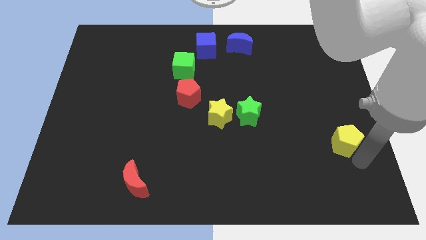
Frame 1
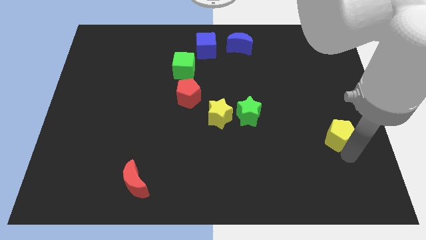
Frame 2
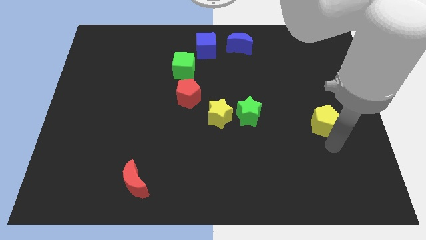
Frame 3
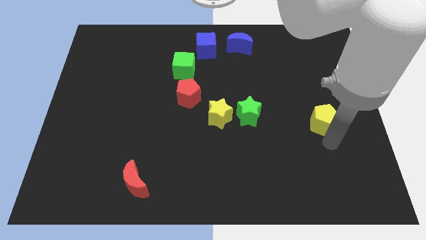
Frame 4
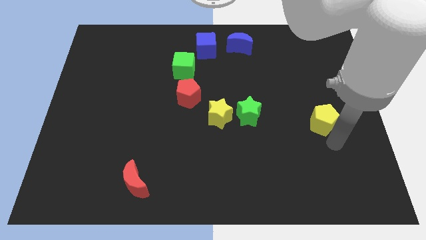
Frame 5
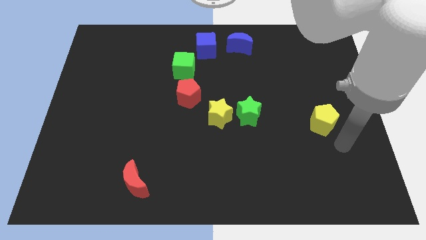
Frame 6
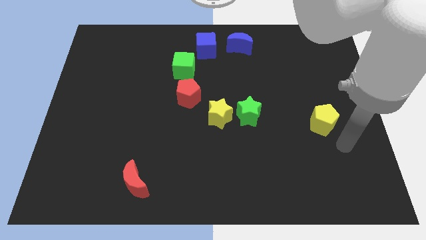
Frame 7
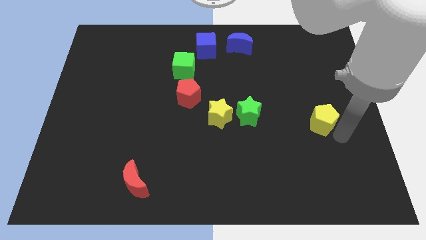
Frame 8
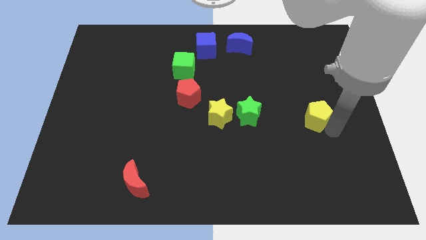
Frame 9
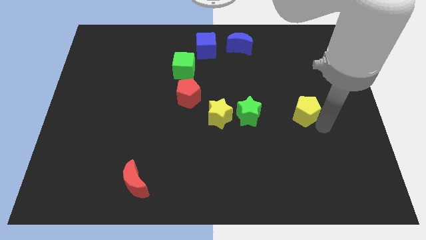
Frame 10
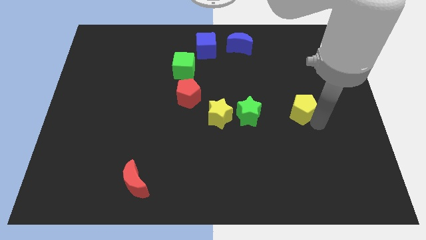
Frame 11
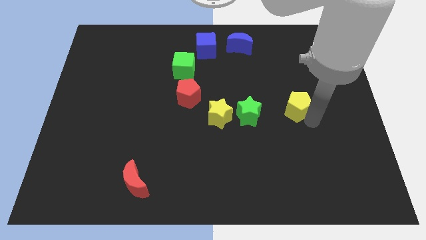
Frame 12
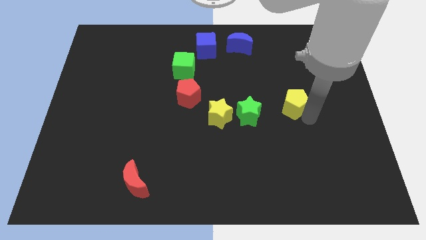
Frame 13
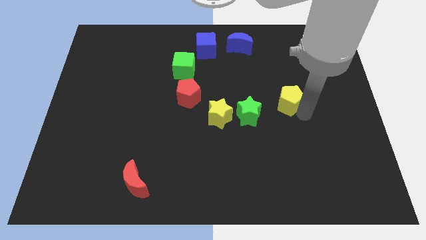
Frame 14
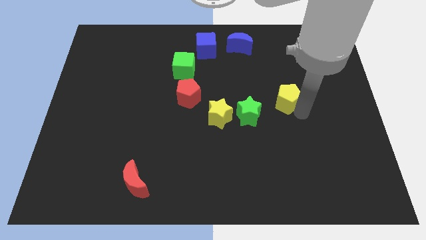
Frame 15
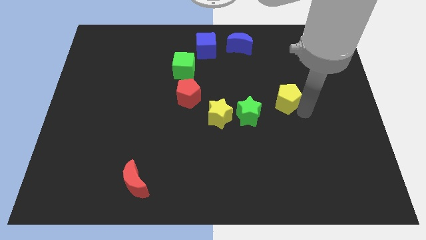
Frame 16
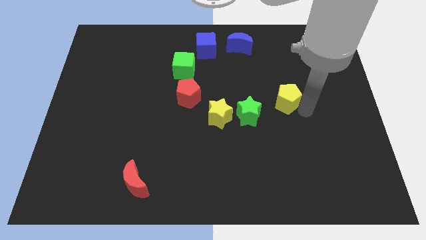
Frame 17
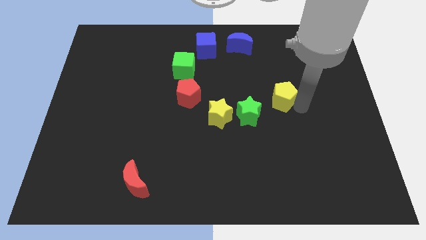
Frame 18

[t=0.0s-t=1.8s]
push the yellow pentagon towards the center of the board

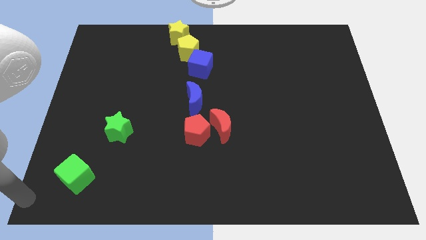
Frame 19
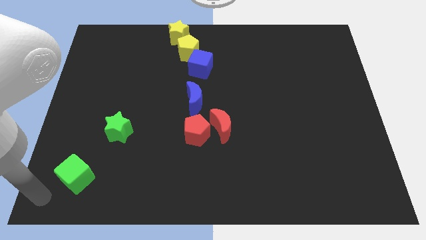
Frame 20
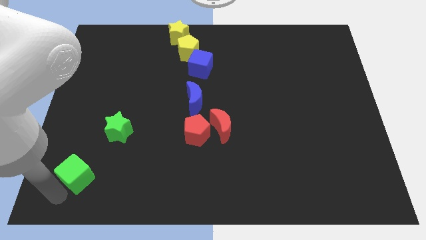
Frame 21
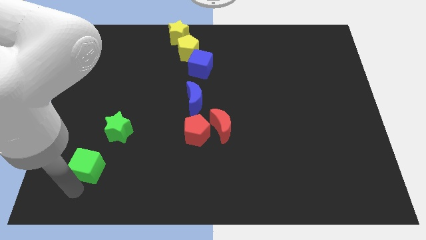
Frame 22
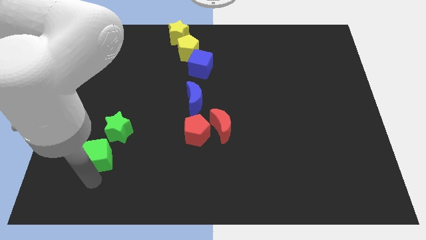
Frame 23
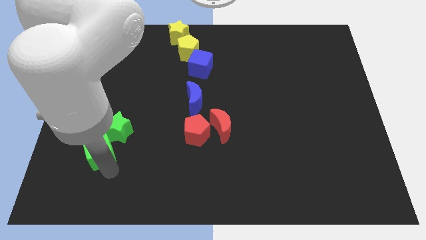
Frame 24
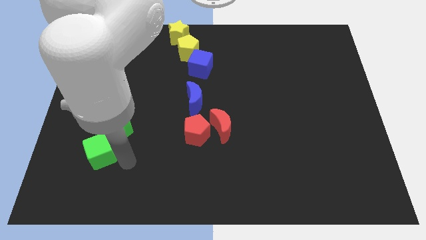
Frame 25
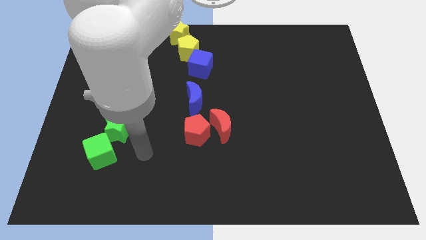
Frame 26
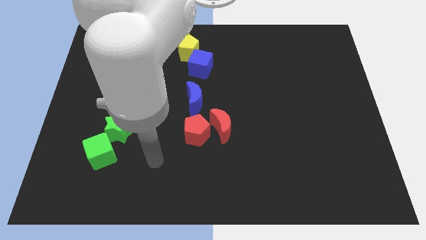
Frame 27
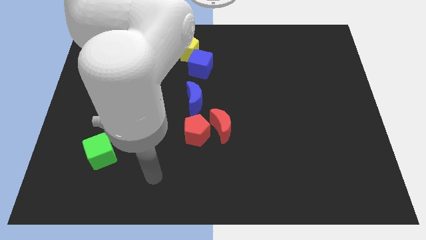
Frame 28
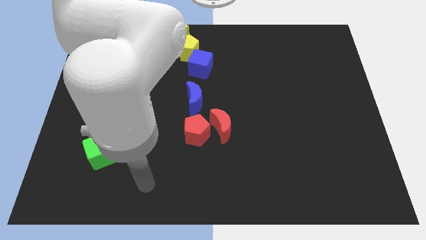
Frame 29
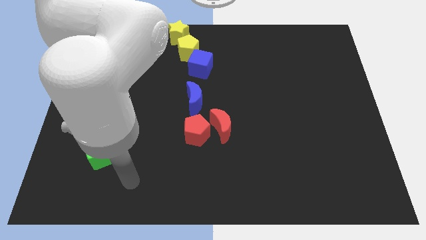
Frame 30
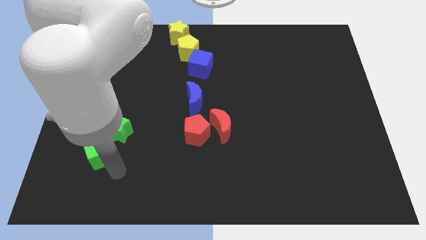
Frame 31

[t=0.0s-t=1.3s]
push green cube towards green star

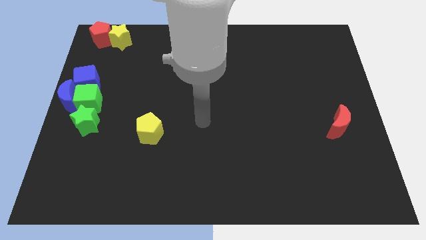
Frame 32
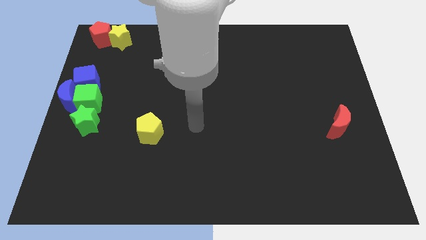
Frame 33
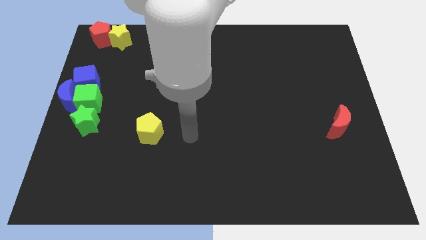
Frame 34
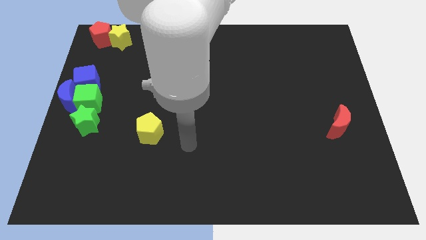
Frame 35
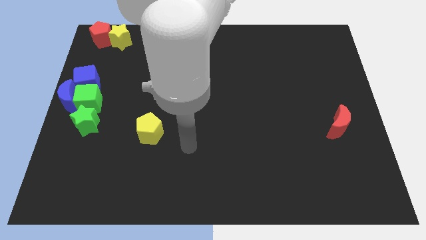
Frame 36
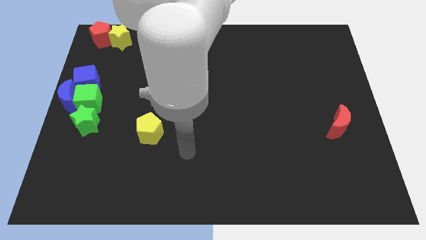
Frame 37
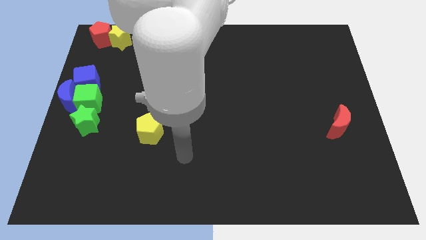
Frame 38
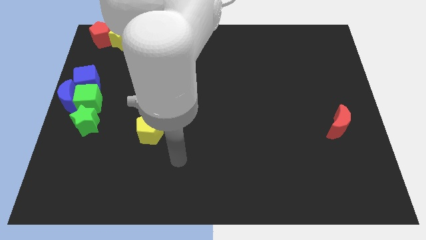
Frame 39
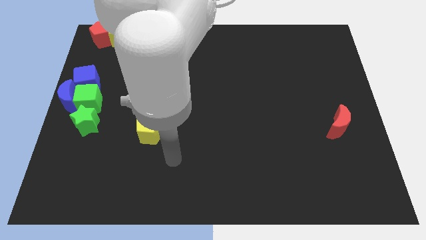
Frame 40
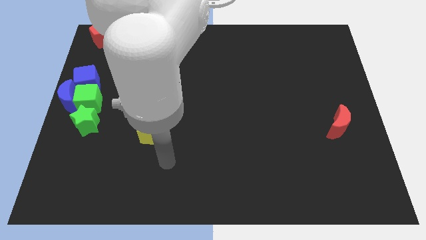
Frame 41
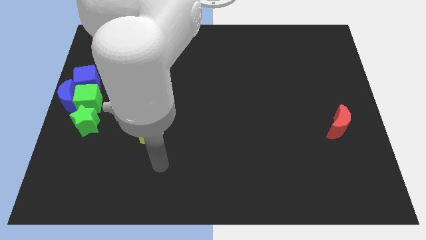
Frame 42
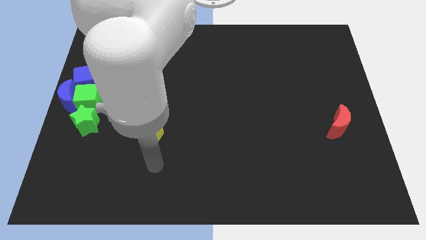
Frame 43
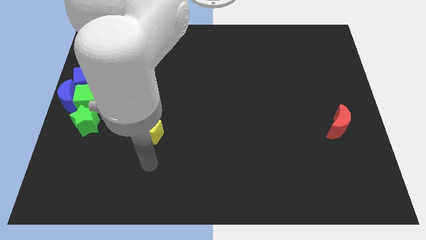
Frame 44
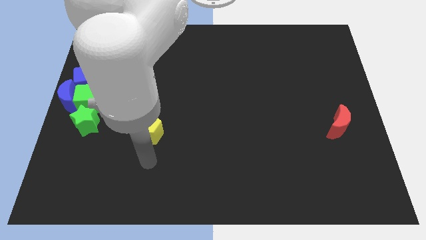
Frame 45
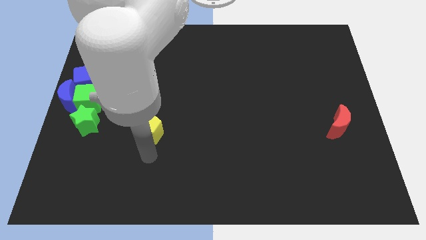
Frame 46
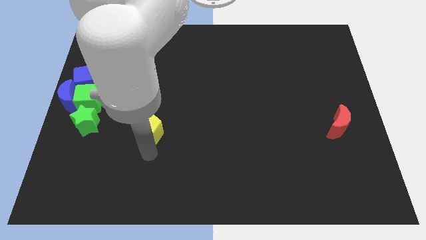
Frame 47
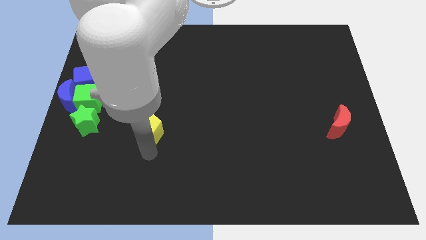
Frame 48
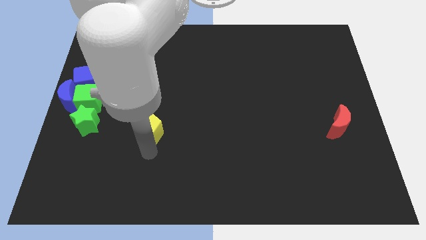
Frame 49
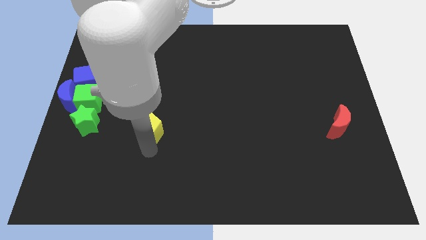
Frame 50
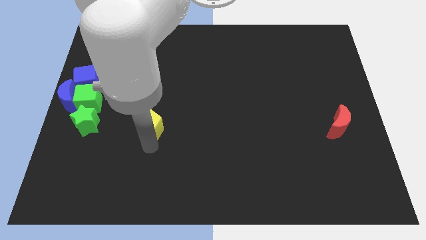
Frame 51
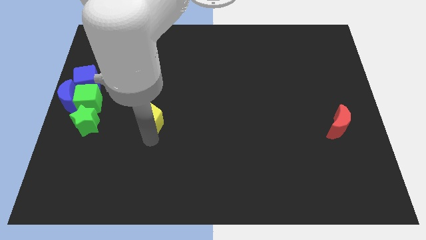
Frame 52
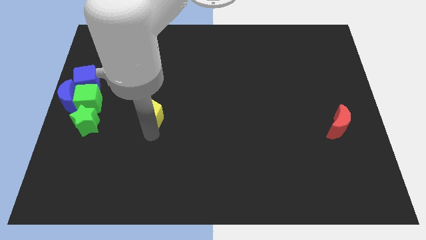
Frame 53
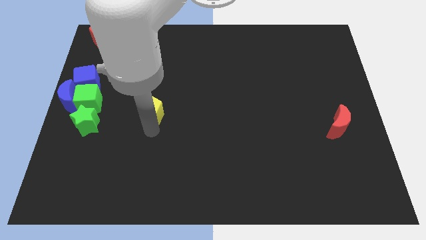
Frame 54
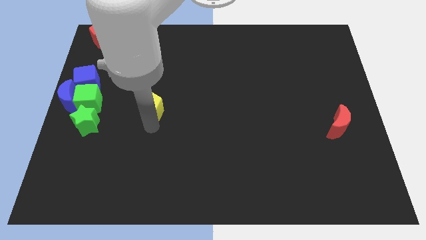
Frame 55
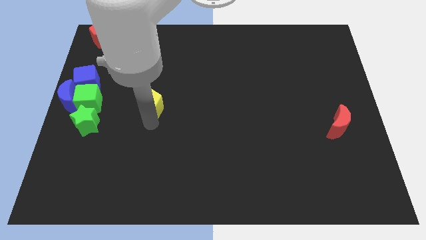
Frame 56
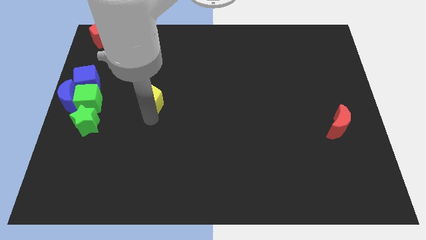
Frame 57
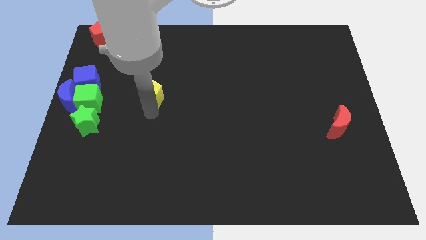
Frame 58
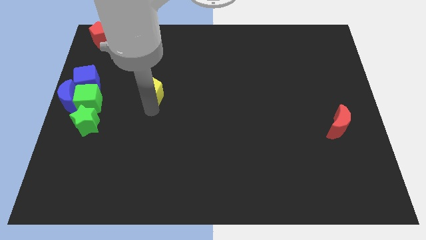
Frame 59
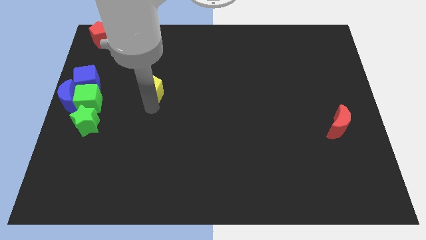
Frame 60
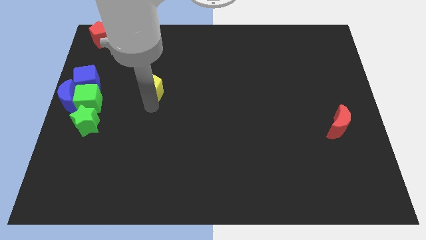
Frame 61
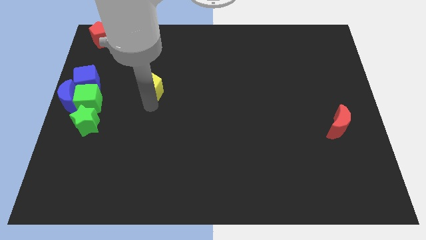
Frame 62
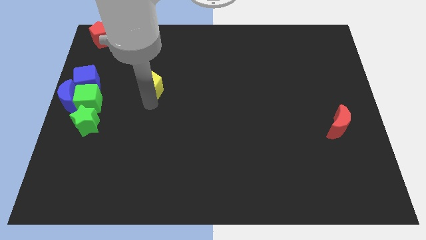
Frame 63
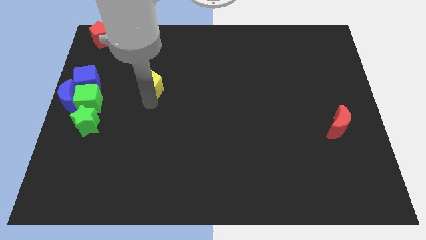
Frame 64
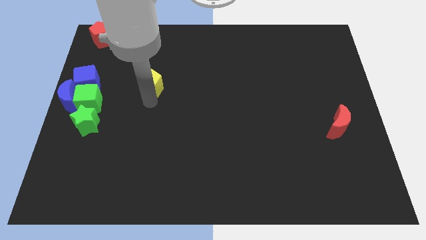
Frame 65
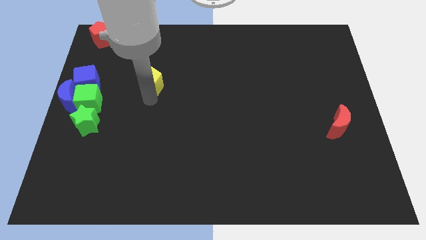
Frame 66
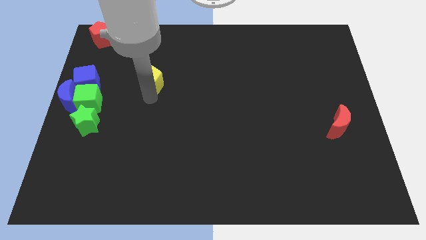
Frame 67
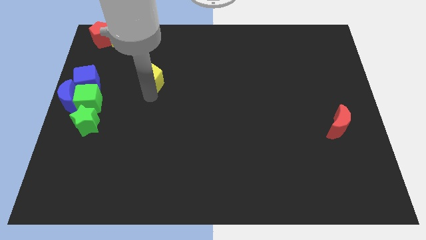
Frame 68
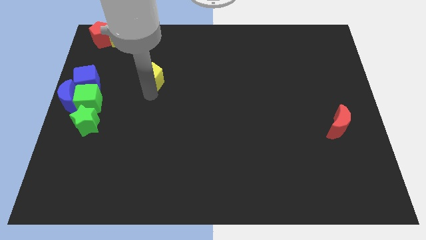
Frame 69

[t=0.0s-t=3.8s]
push the yellow pentagon towards the top side of the board

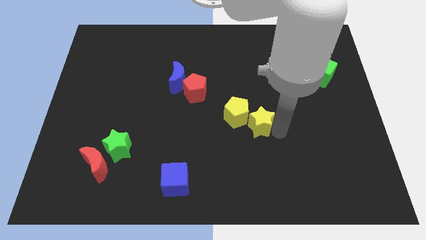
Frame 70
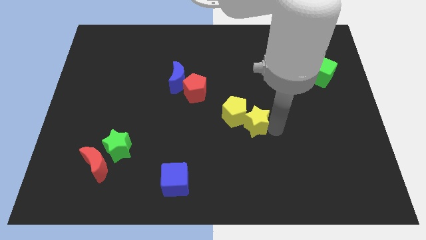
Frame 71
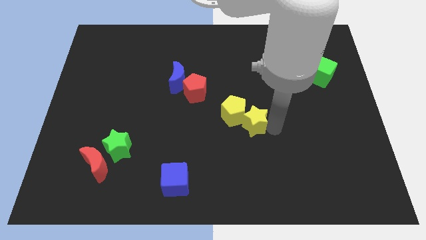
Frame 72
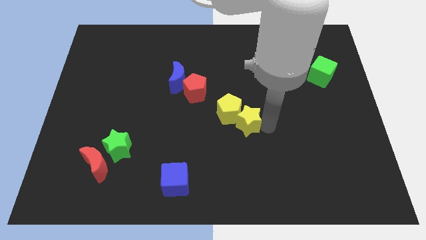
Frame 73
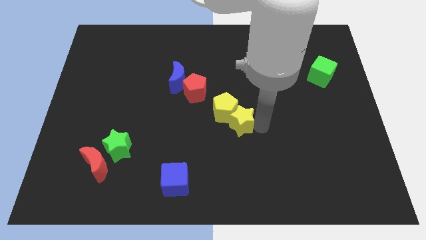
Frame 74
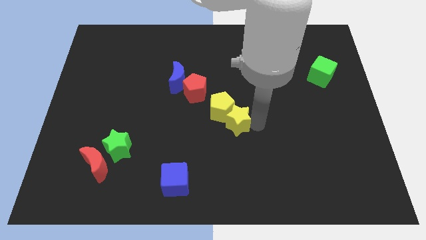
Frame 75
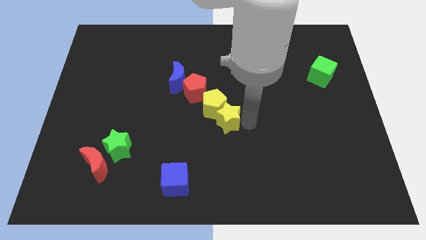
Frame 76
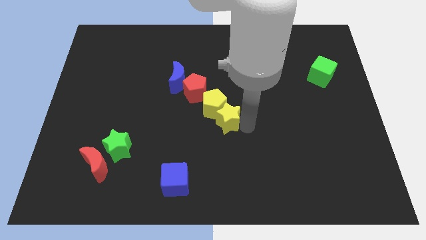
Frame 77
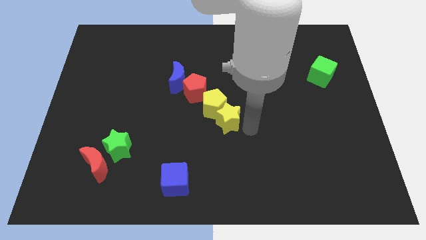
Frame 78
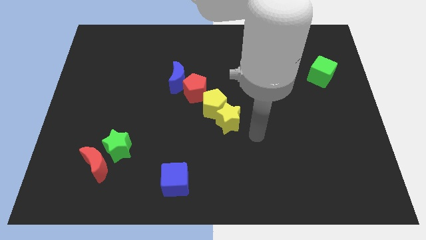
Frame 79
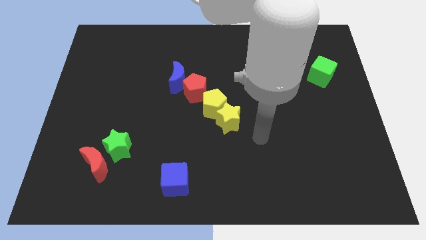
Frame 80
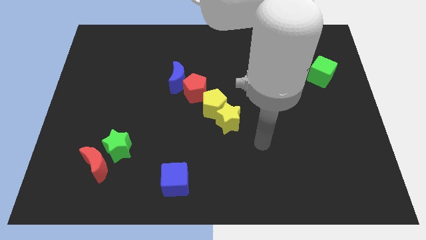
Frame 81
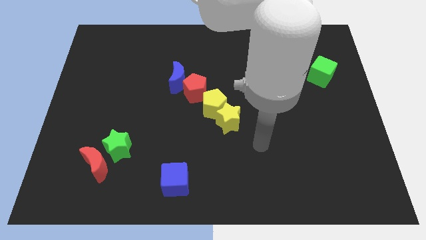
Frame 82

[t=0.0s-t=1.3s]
push the yellow star along with yellow pentagon to the bottom right to the red pentagon

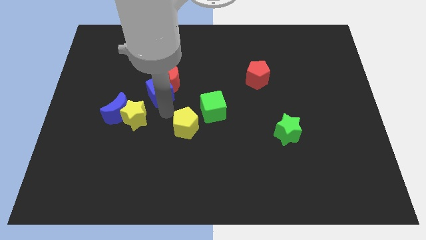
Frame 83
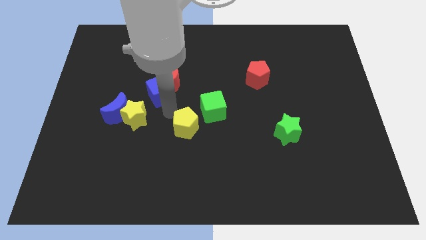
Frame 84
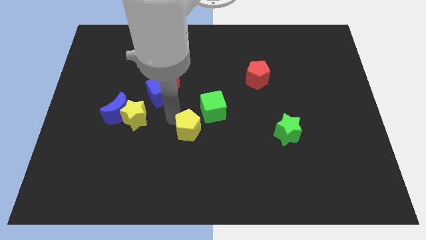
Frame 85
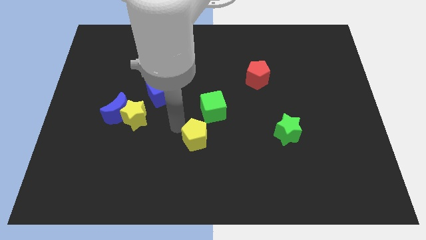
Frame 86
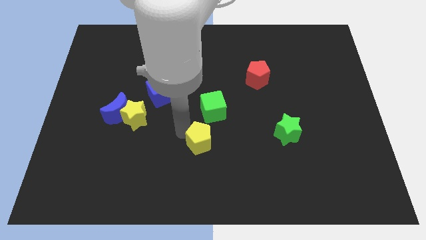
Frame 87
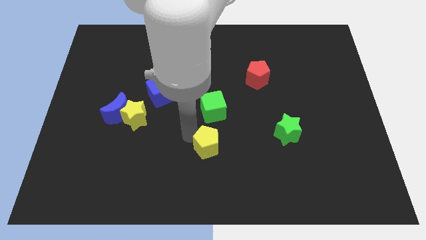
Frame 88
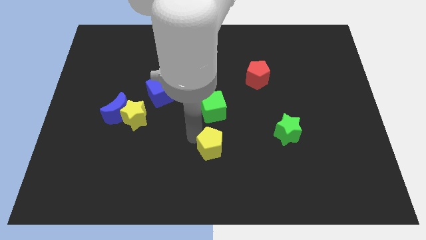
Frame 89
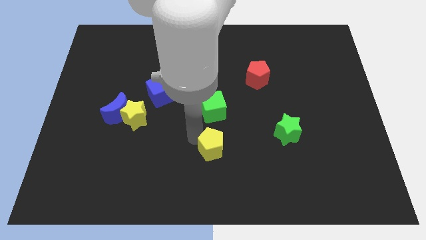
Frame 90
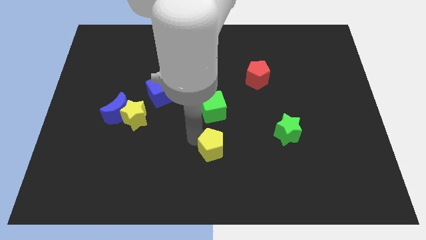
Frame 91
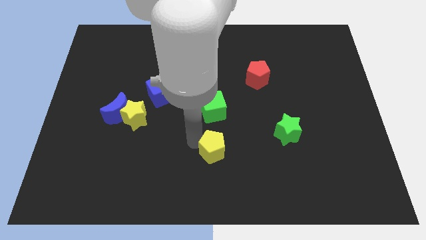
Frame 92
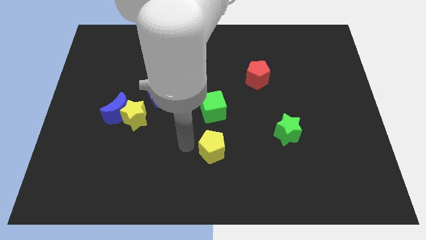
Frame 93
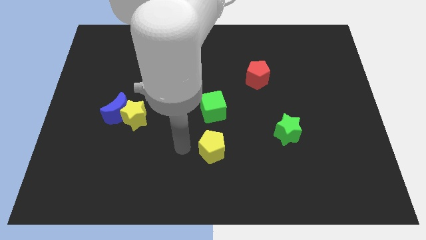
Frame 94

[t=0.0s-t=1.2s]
push the yellow pentagon to the bottom of the green cube
